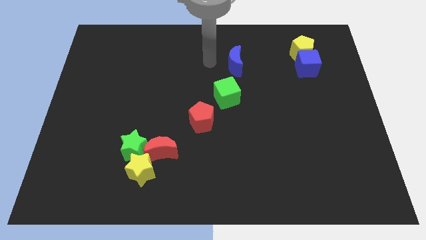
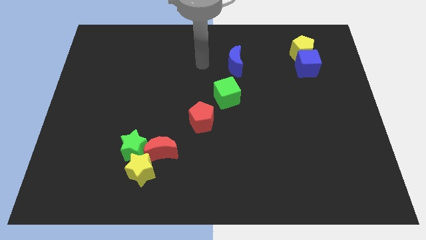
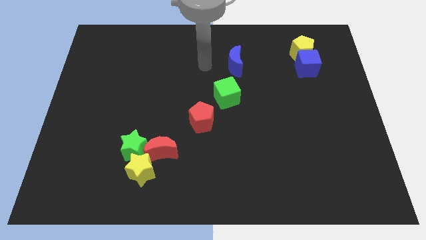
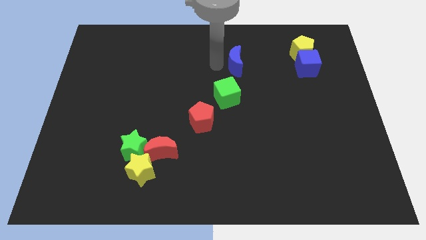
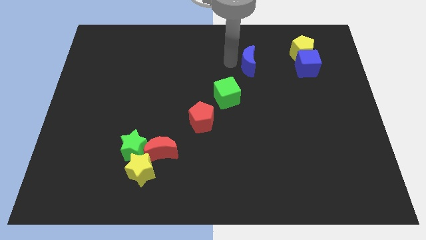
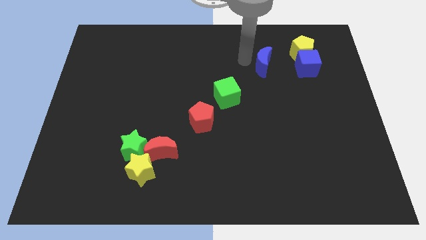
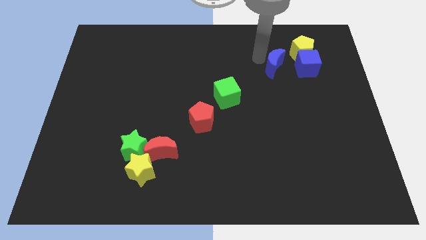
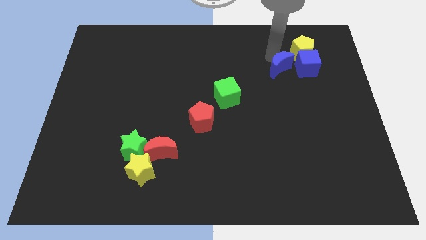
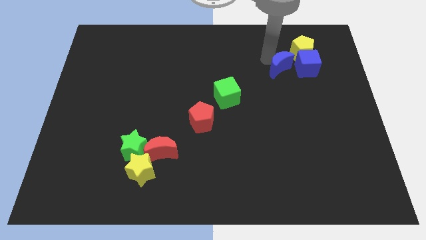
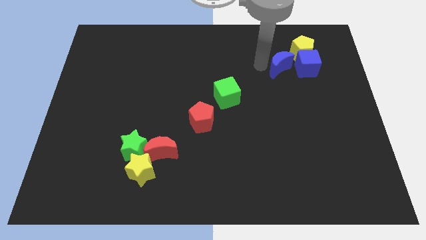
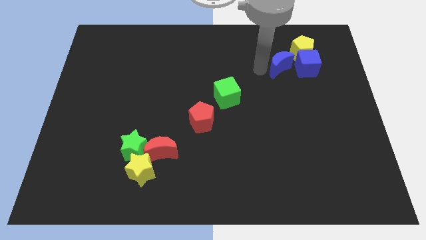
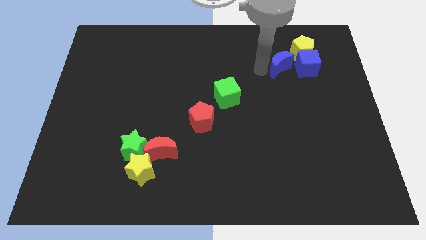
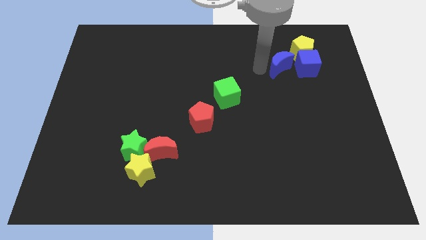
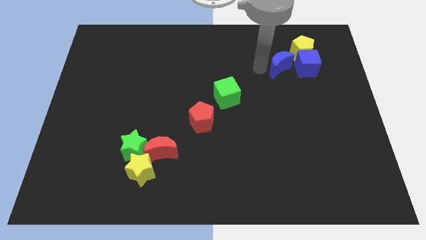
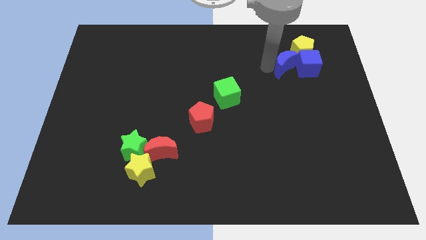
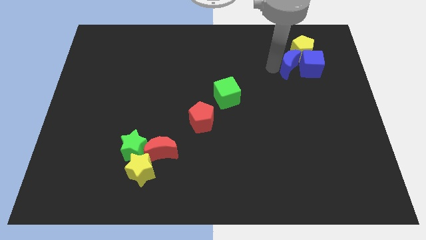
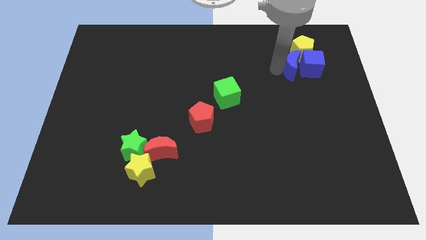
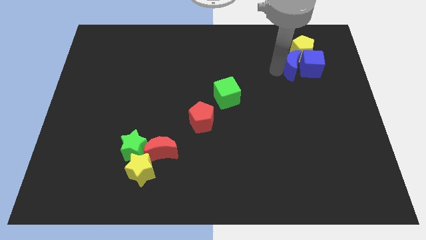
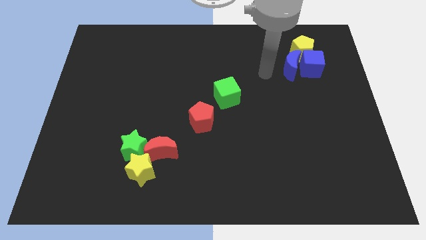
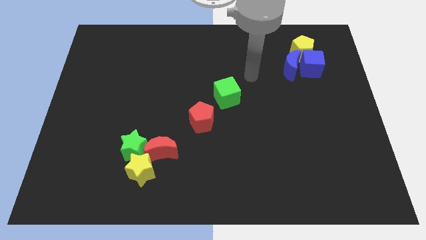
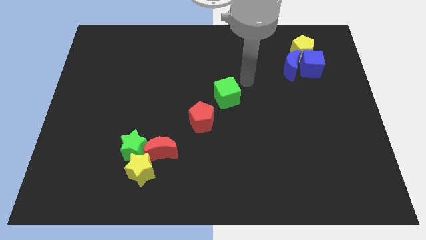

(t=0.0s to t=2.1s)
push the blue moon into blue cube to the left

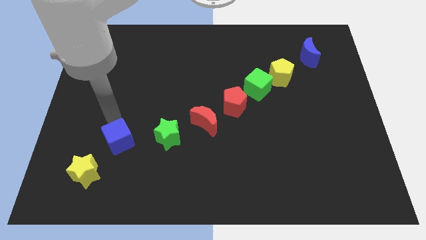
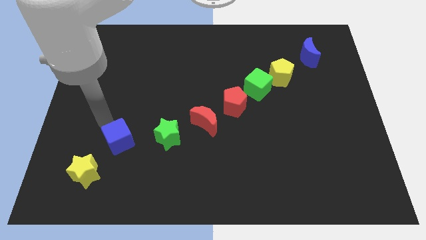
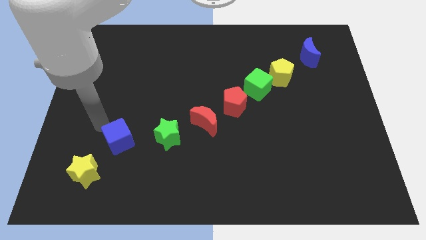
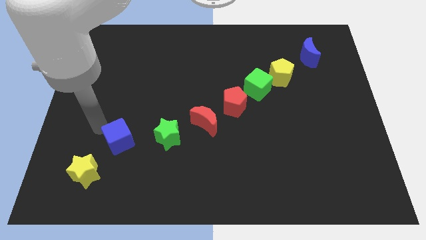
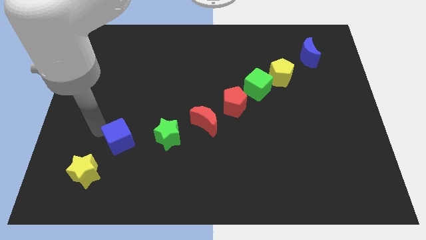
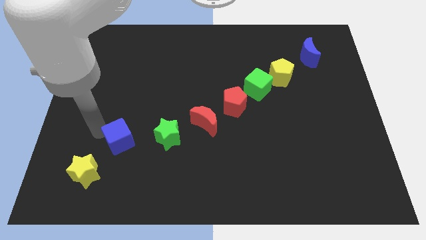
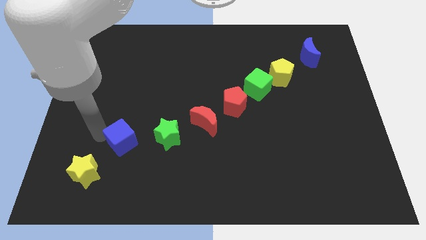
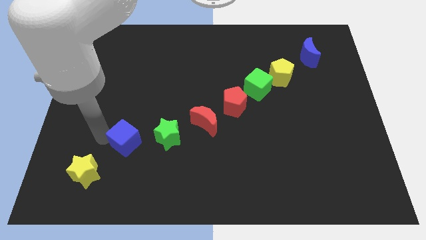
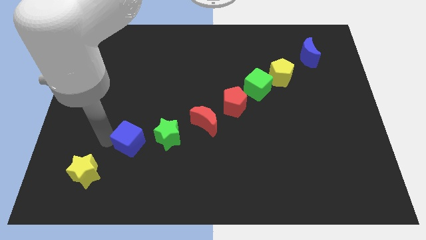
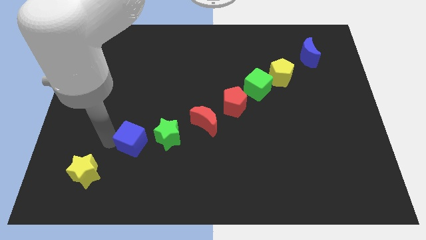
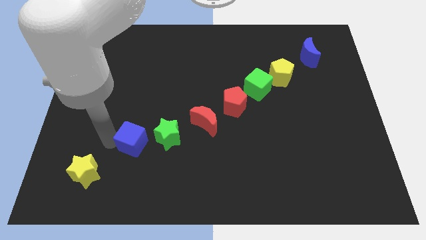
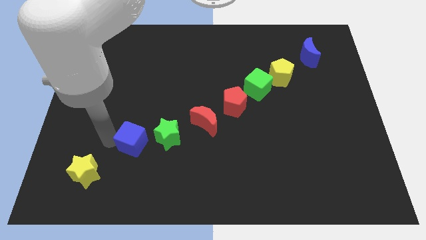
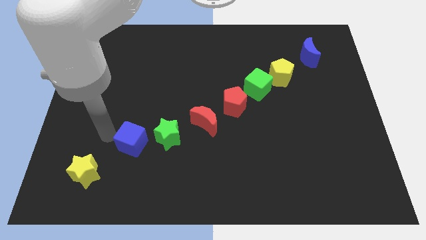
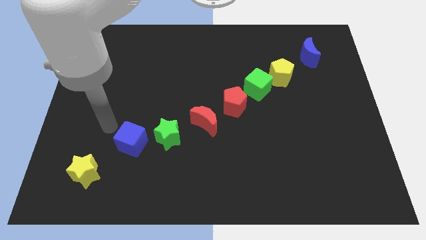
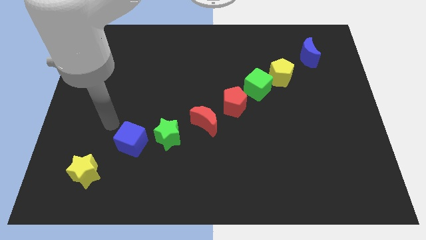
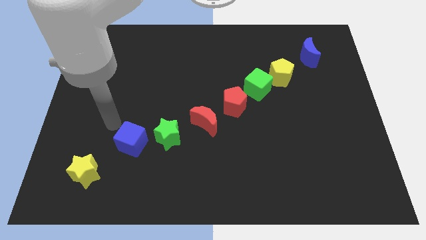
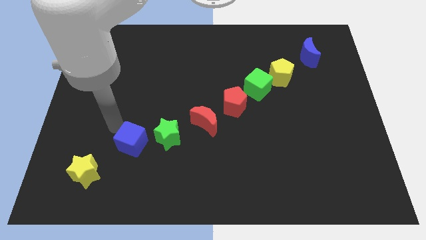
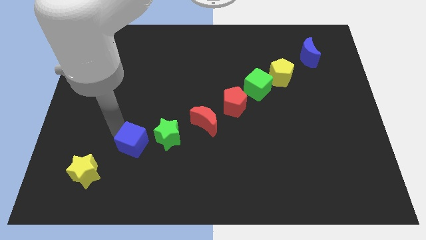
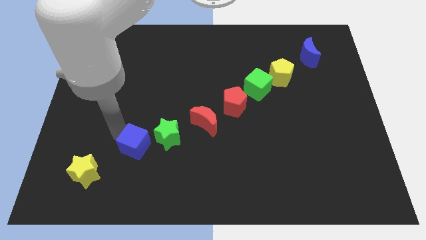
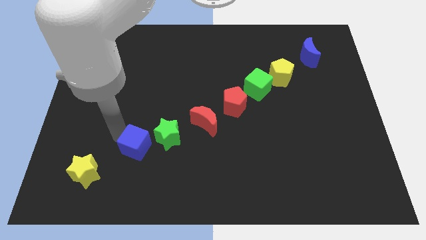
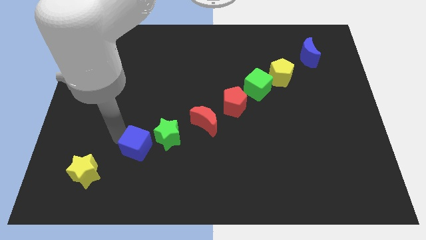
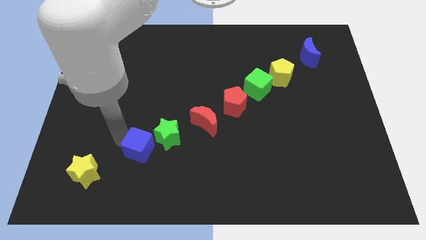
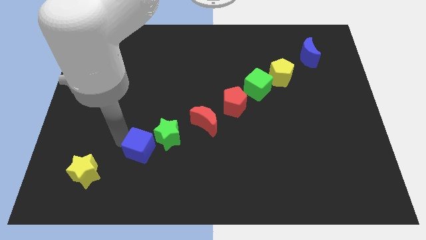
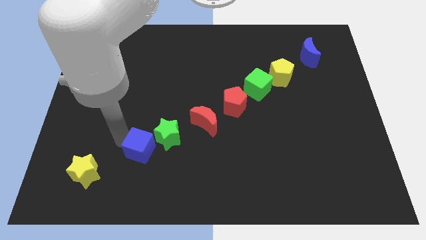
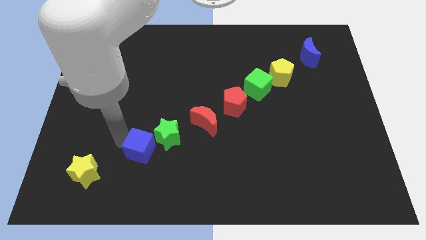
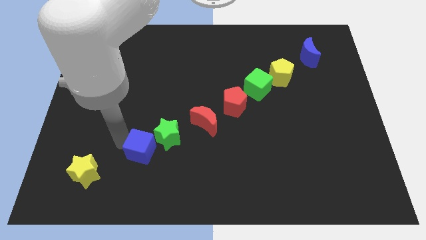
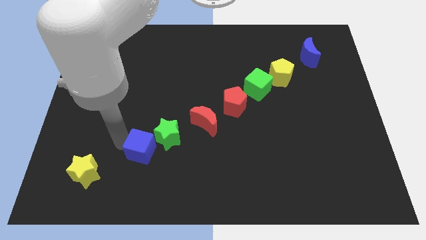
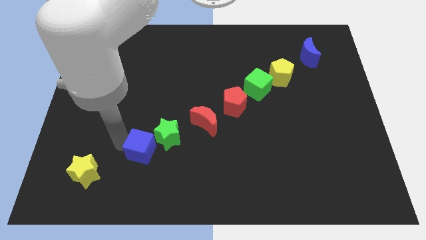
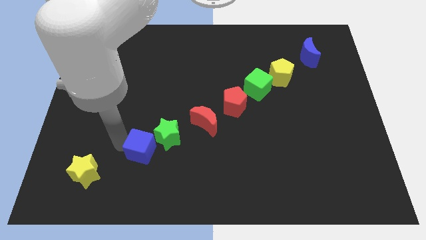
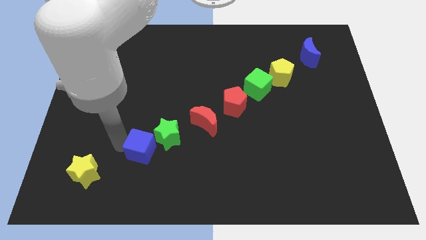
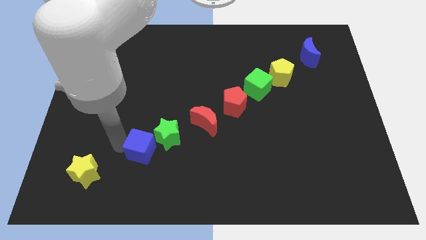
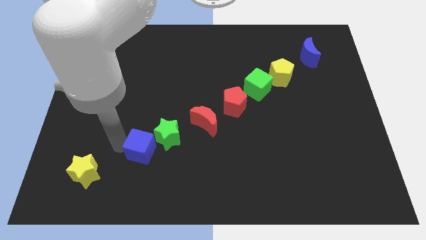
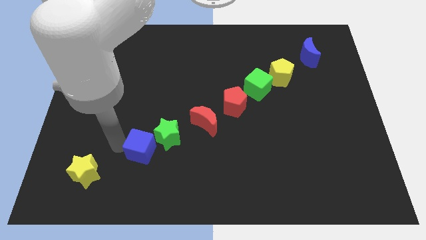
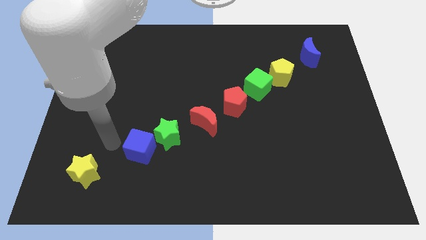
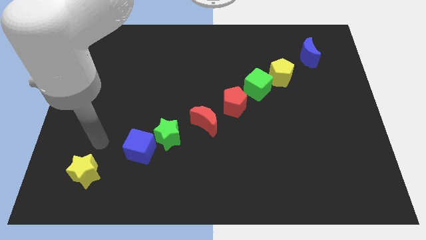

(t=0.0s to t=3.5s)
place the blue cube beside the green star

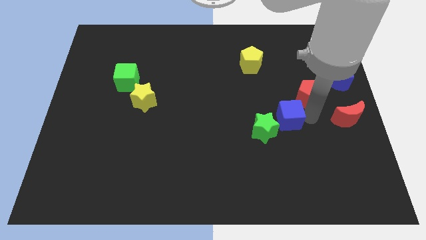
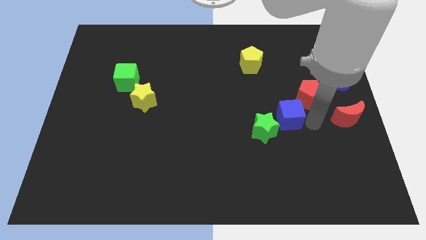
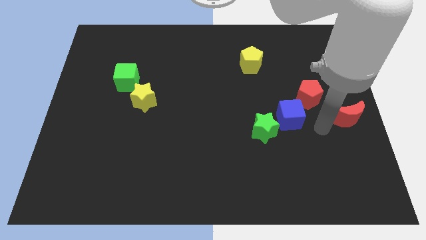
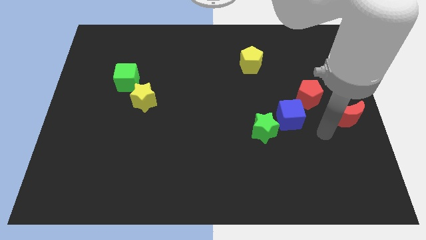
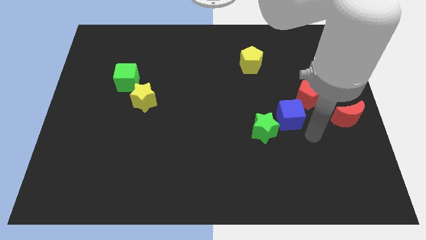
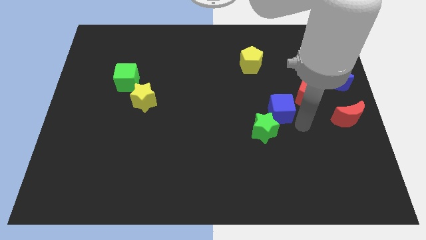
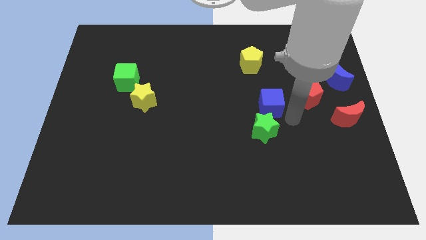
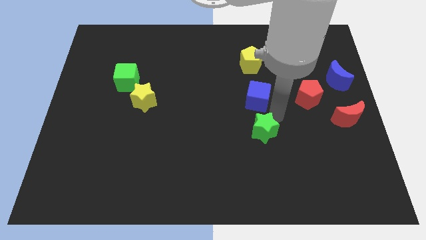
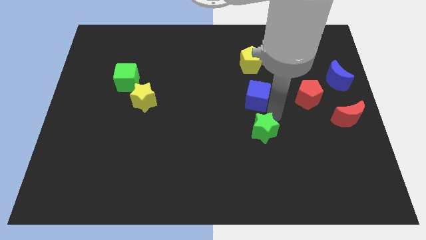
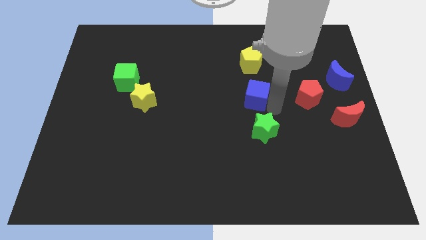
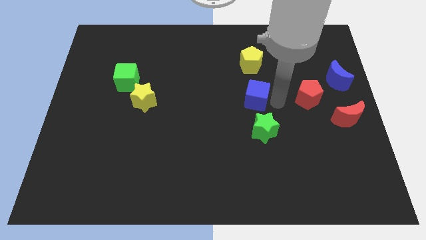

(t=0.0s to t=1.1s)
place the blue square between the yellow pentagon and the green star

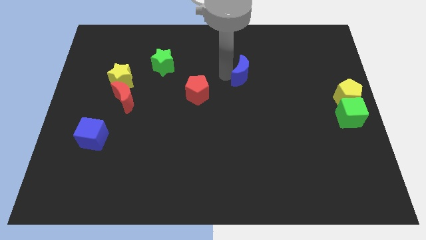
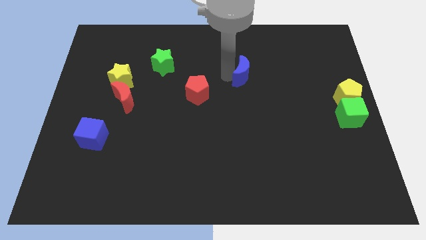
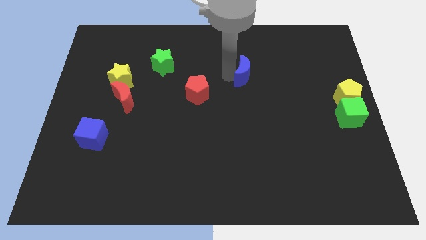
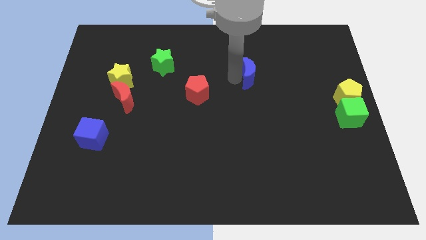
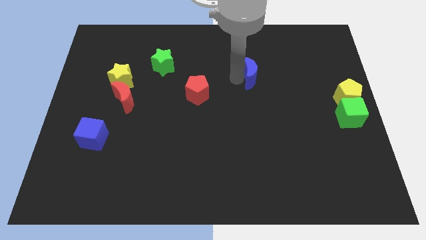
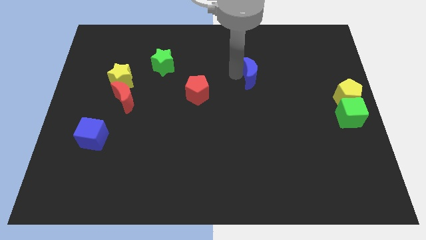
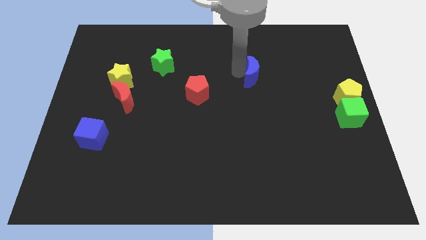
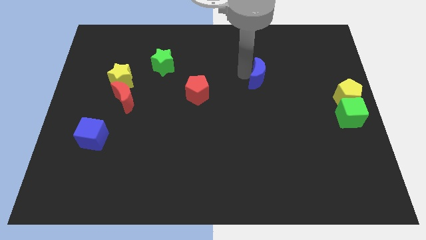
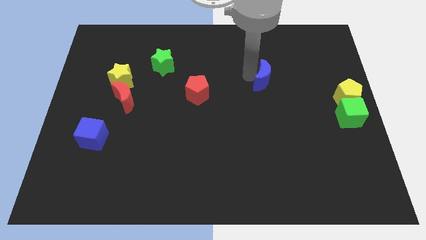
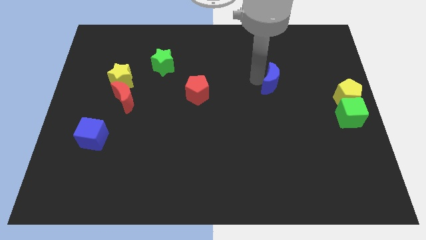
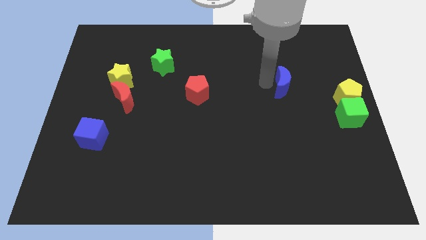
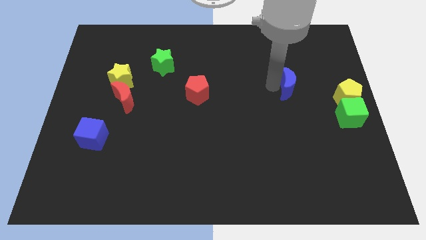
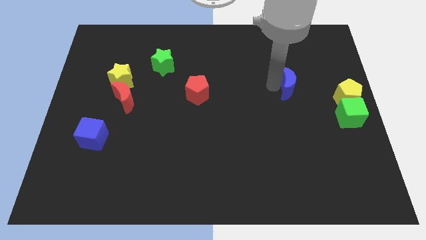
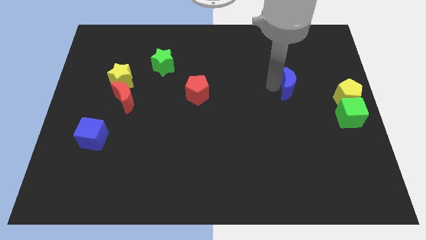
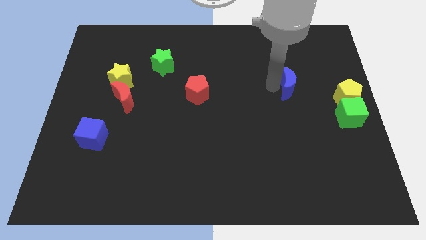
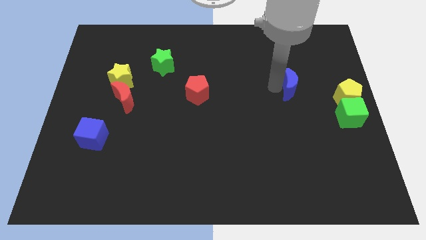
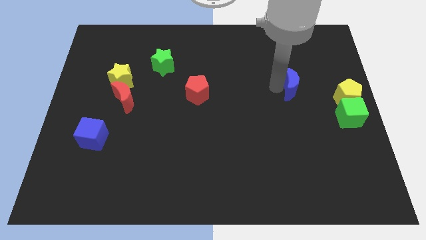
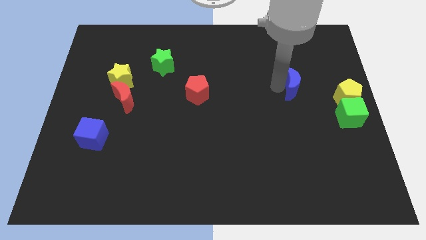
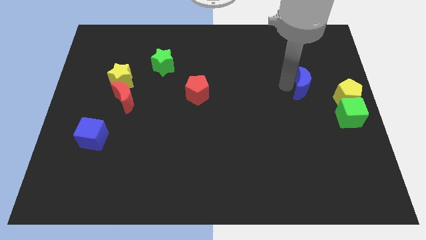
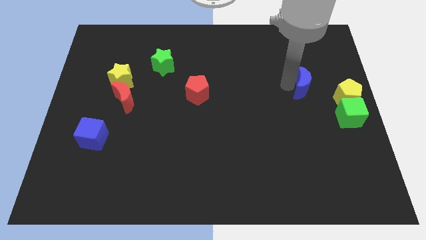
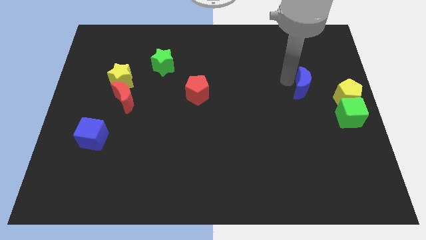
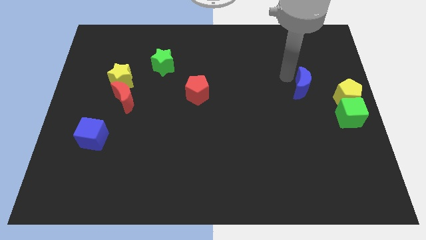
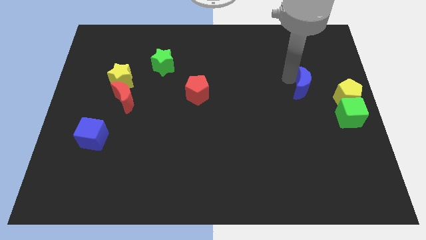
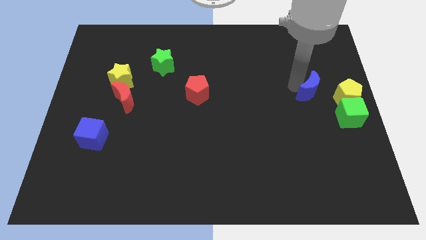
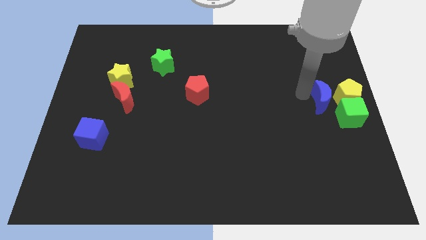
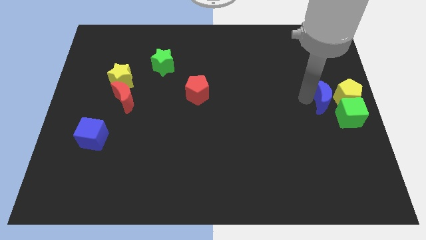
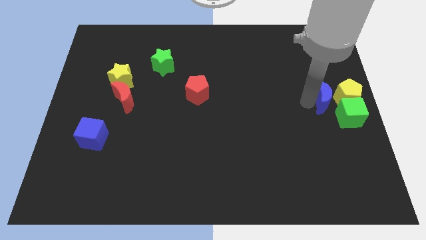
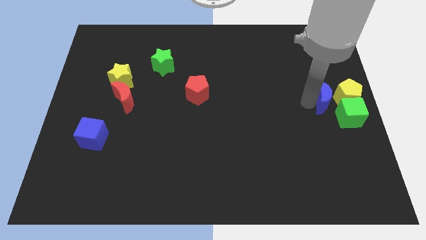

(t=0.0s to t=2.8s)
move the blue moon to the left of yellow pentagon
